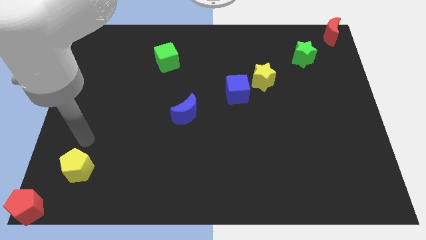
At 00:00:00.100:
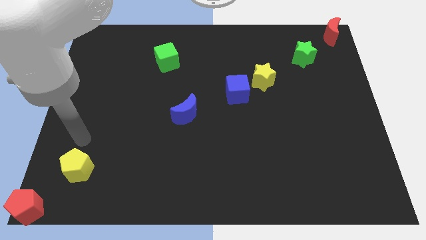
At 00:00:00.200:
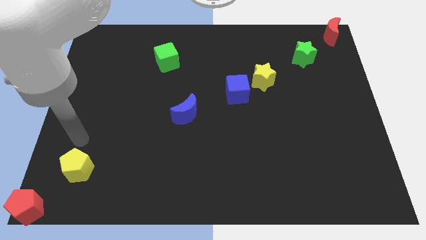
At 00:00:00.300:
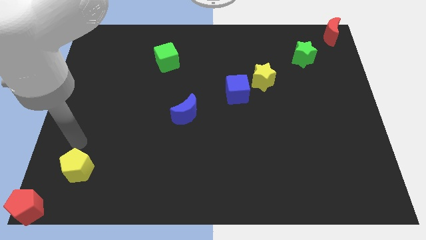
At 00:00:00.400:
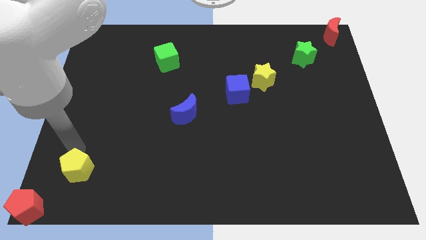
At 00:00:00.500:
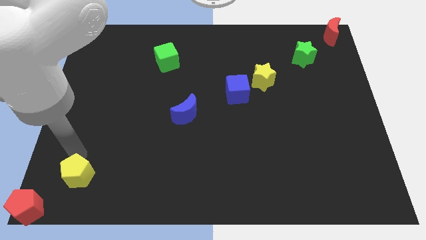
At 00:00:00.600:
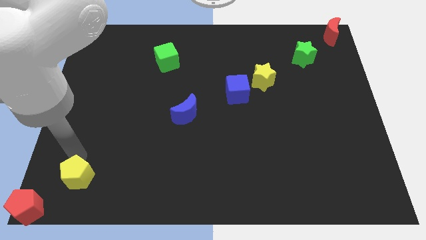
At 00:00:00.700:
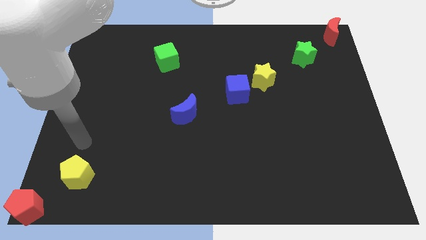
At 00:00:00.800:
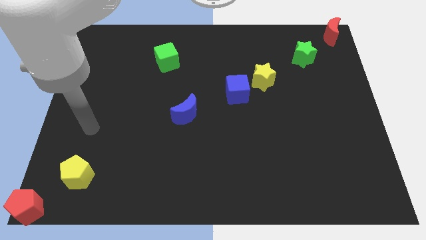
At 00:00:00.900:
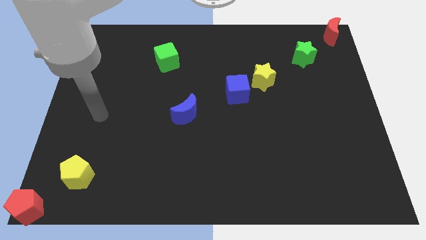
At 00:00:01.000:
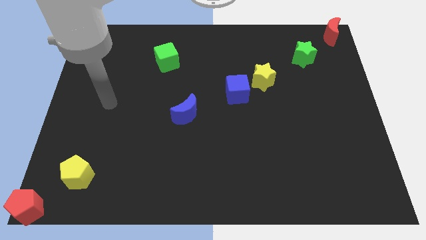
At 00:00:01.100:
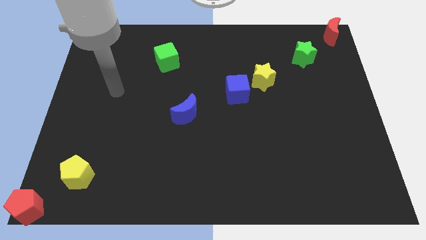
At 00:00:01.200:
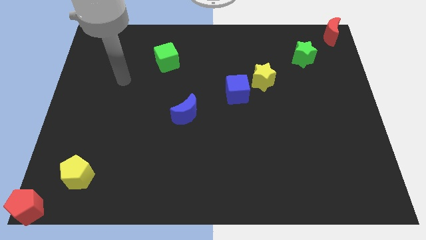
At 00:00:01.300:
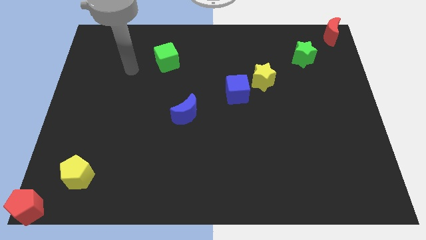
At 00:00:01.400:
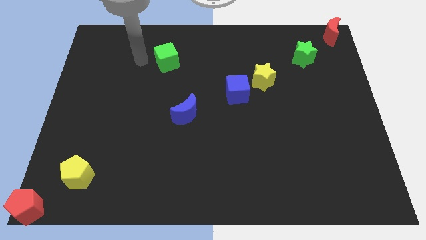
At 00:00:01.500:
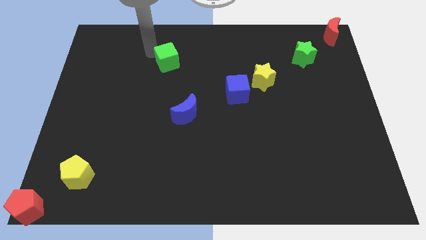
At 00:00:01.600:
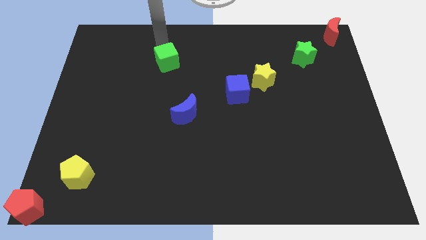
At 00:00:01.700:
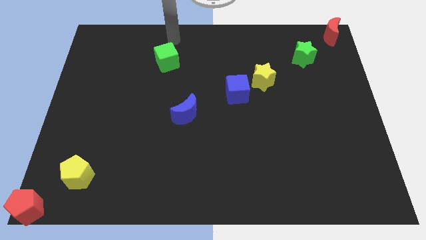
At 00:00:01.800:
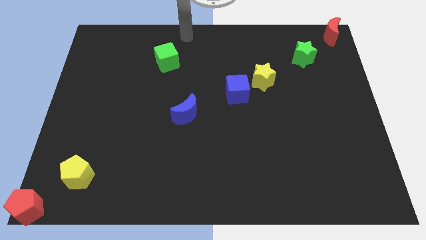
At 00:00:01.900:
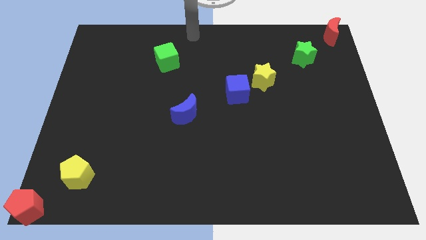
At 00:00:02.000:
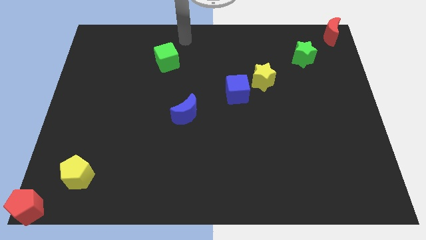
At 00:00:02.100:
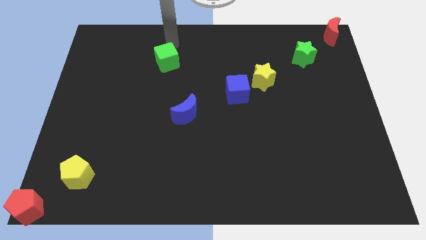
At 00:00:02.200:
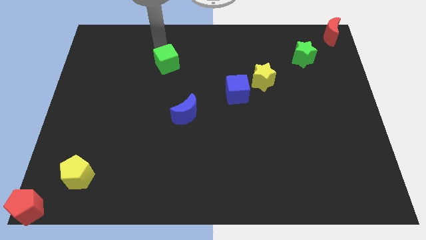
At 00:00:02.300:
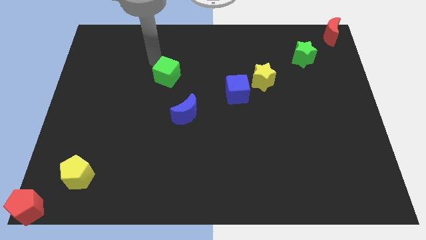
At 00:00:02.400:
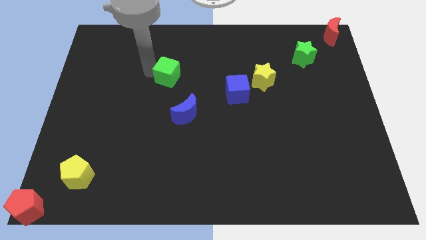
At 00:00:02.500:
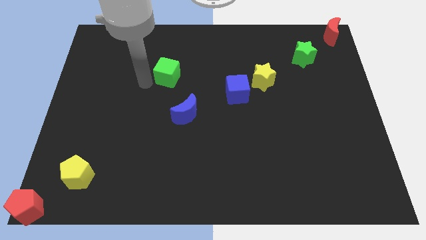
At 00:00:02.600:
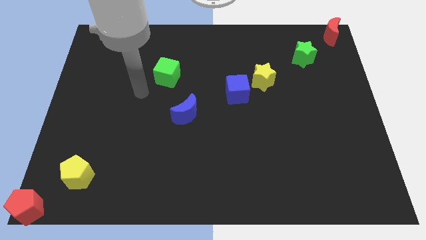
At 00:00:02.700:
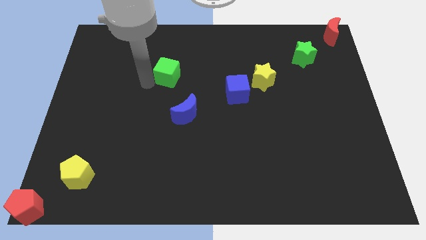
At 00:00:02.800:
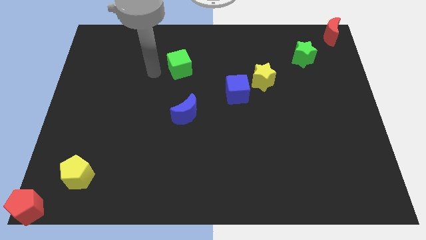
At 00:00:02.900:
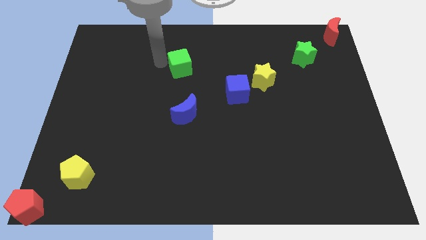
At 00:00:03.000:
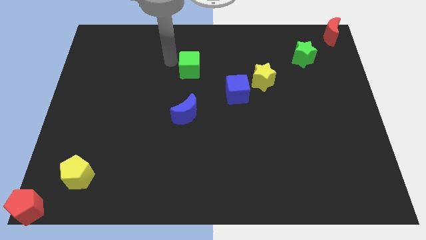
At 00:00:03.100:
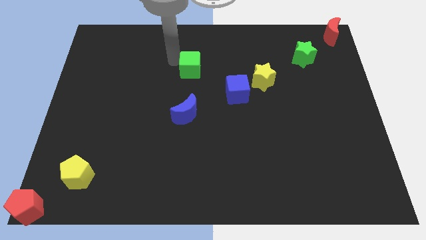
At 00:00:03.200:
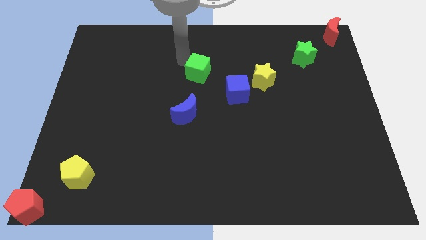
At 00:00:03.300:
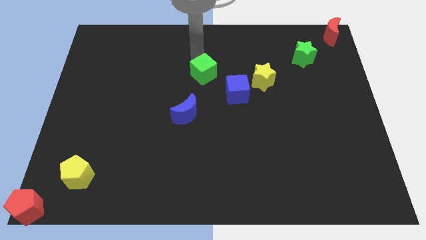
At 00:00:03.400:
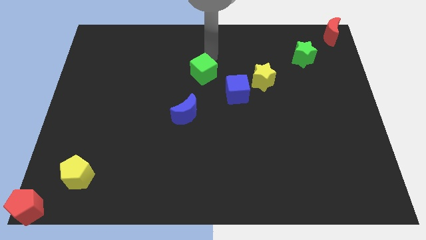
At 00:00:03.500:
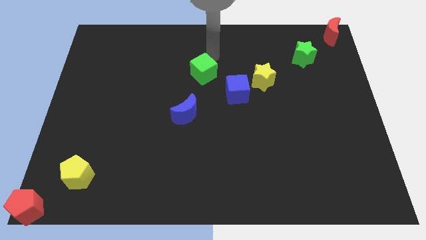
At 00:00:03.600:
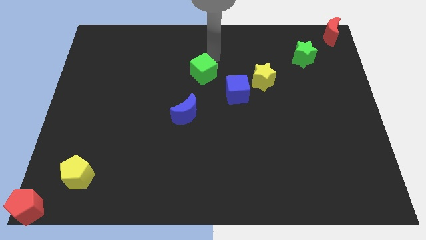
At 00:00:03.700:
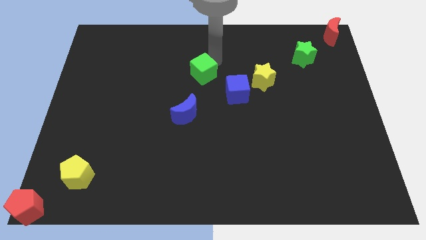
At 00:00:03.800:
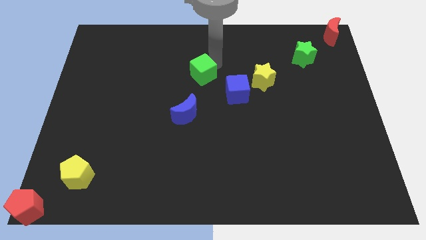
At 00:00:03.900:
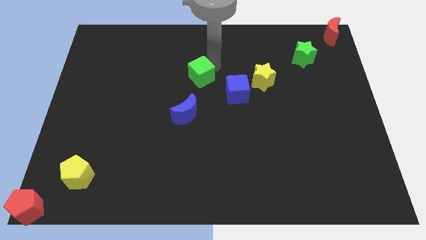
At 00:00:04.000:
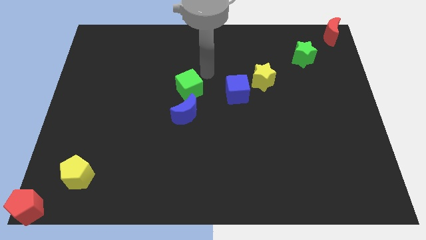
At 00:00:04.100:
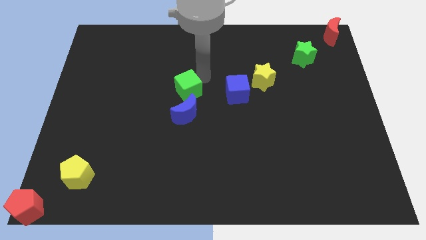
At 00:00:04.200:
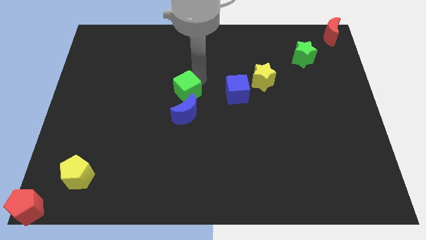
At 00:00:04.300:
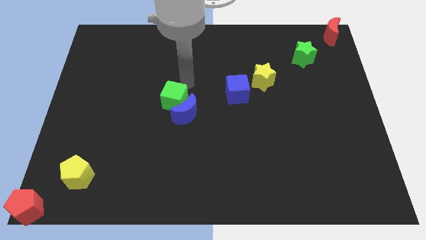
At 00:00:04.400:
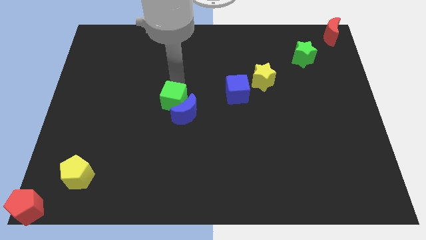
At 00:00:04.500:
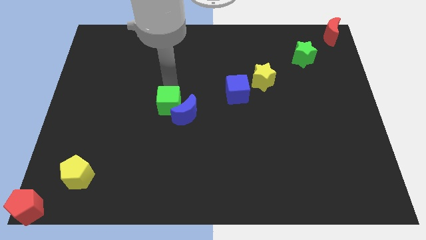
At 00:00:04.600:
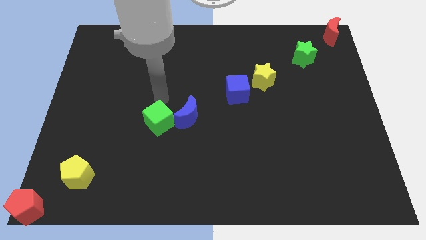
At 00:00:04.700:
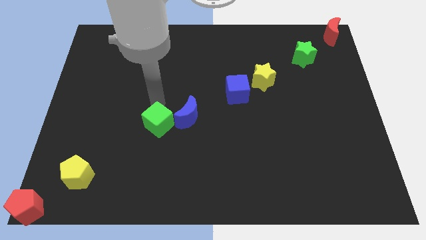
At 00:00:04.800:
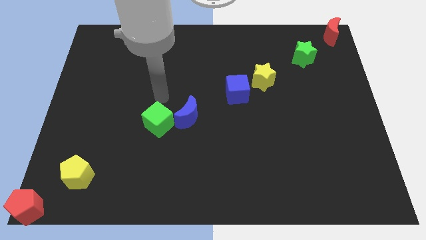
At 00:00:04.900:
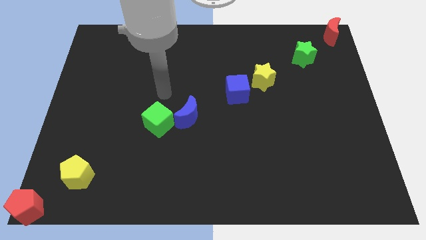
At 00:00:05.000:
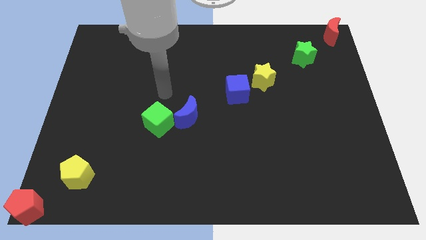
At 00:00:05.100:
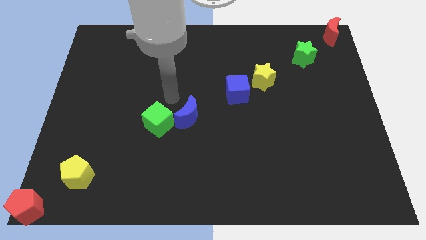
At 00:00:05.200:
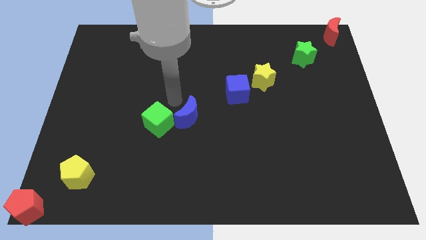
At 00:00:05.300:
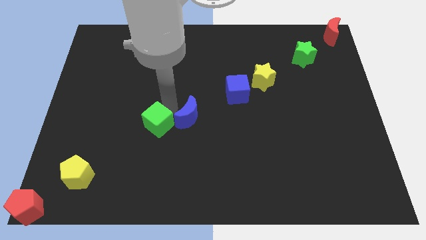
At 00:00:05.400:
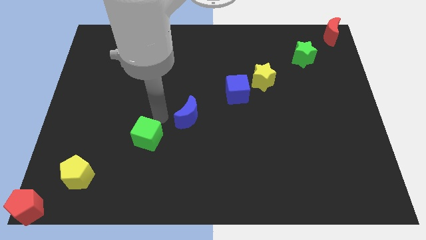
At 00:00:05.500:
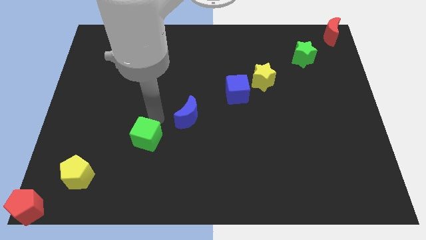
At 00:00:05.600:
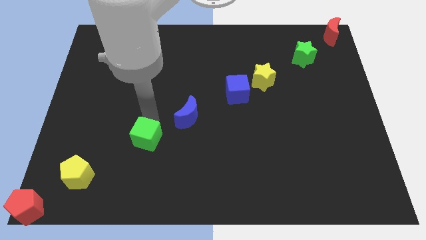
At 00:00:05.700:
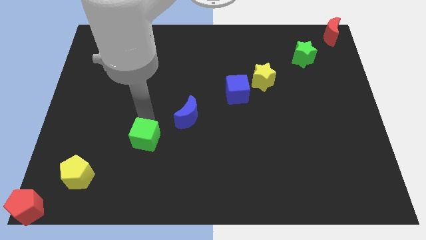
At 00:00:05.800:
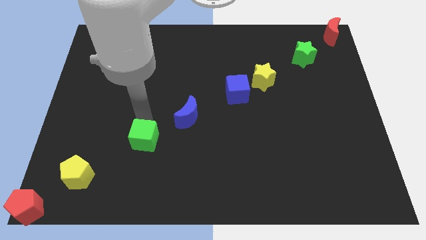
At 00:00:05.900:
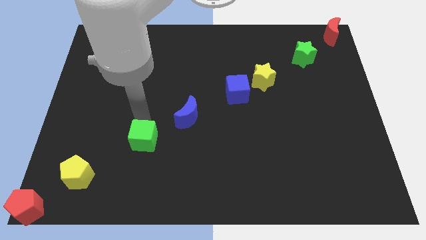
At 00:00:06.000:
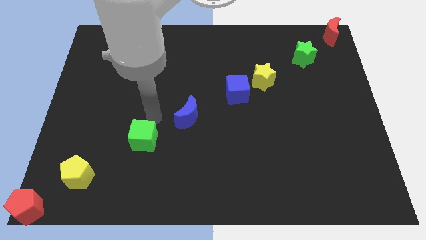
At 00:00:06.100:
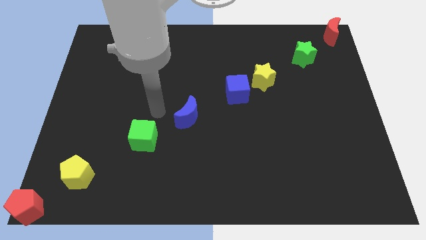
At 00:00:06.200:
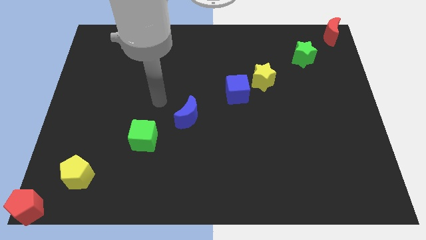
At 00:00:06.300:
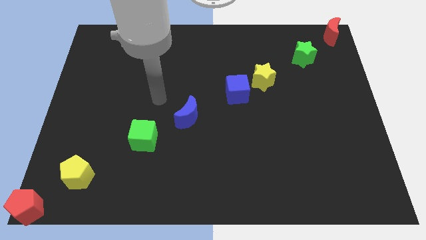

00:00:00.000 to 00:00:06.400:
move the green cube in between the blue crescent and yellow pentagon

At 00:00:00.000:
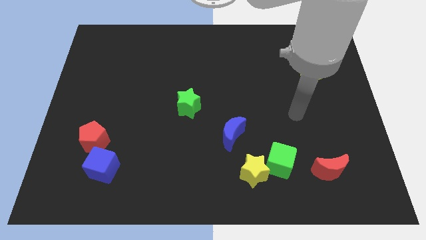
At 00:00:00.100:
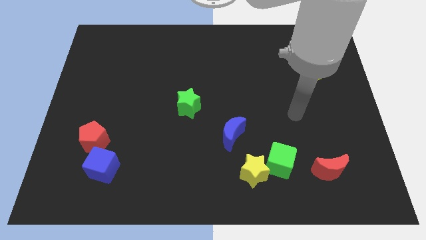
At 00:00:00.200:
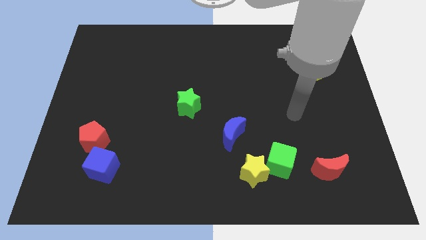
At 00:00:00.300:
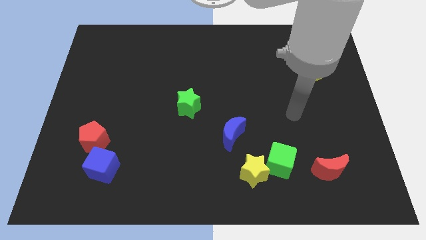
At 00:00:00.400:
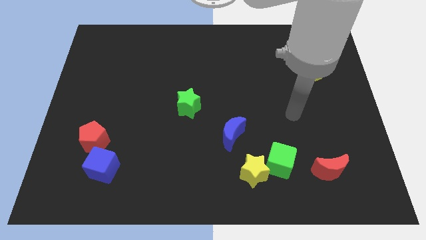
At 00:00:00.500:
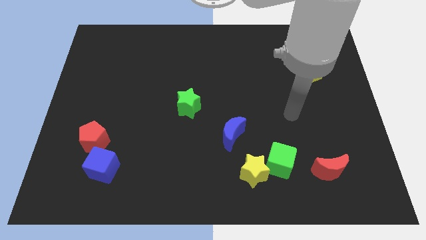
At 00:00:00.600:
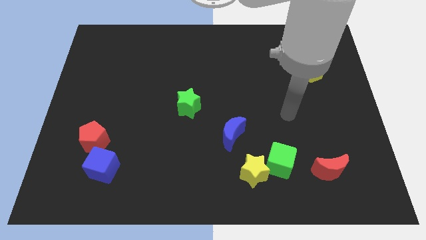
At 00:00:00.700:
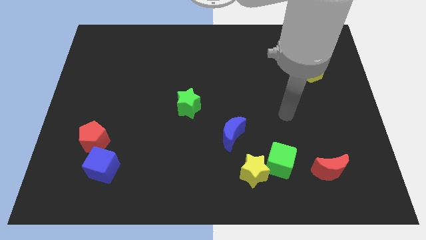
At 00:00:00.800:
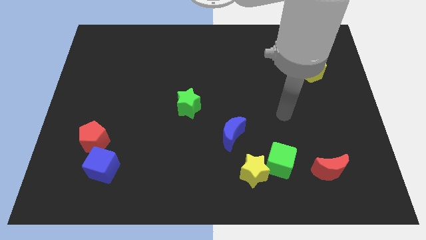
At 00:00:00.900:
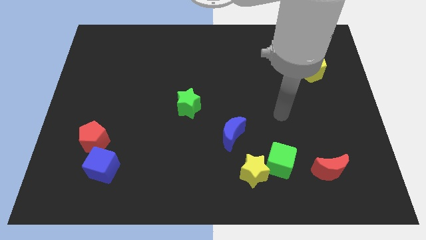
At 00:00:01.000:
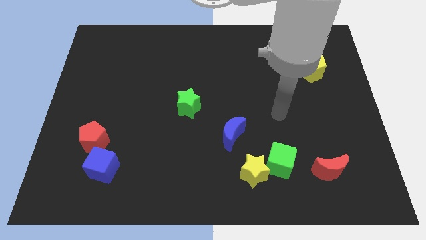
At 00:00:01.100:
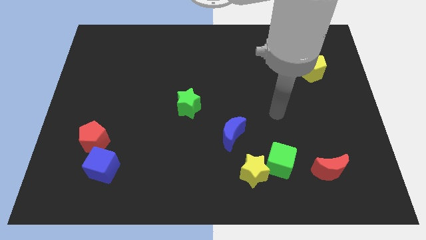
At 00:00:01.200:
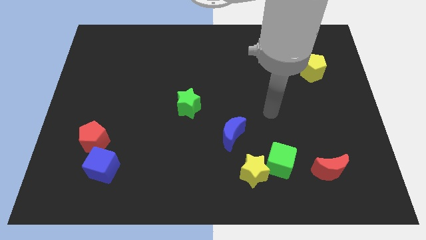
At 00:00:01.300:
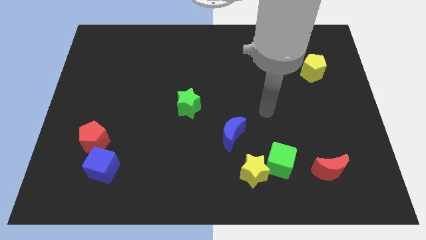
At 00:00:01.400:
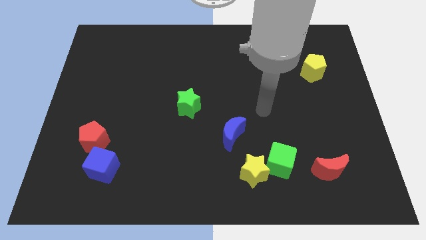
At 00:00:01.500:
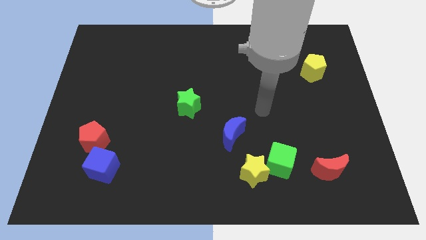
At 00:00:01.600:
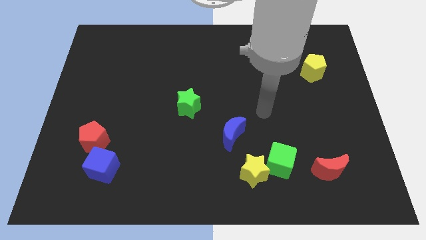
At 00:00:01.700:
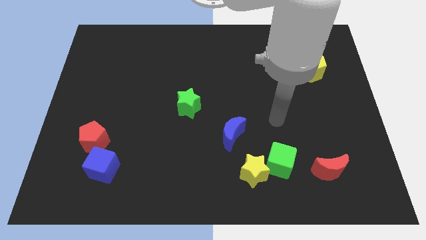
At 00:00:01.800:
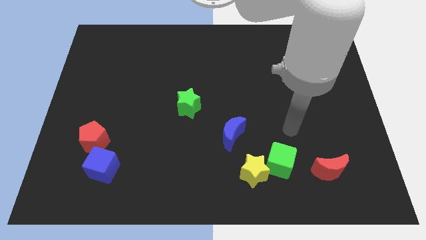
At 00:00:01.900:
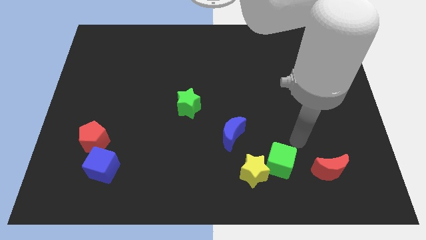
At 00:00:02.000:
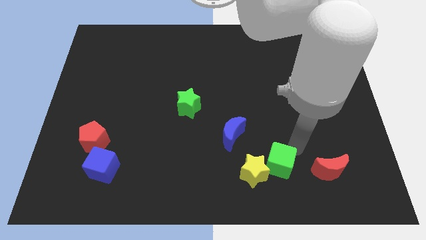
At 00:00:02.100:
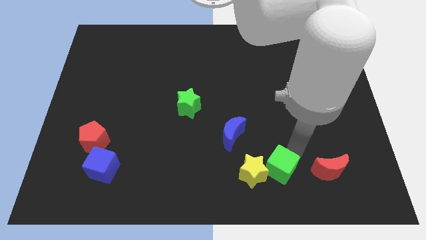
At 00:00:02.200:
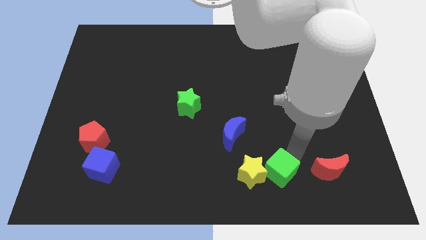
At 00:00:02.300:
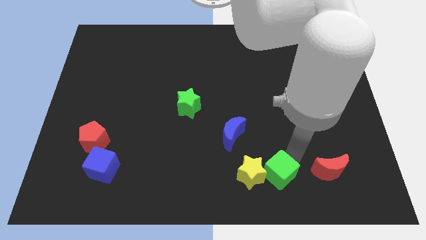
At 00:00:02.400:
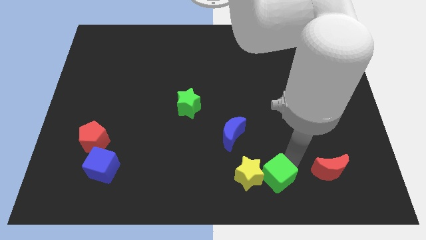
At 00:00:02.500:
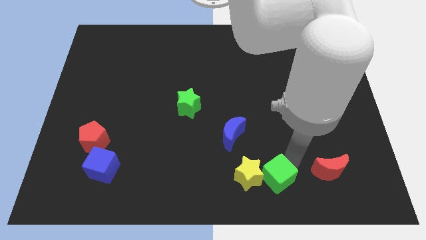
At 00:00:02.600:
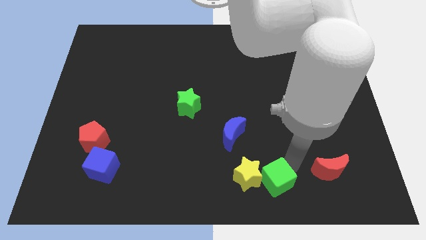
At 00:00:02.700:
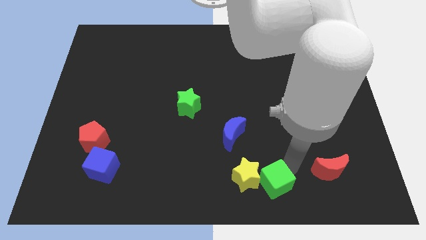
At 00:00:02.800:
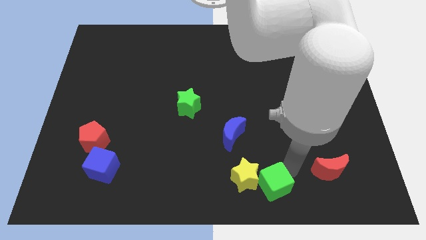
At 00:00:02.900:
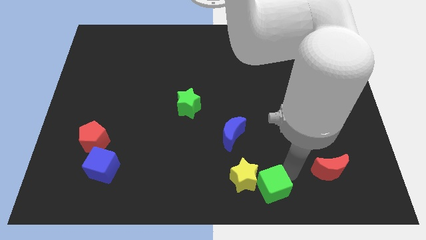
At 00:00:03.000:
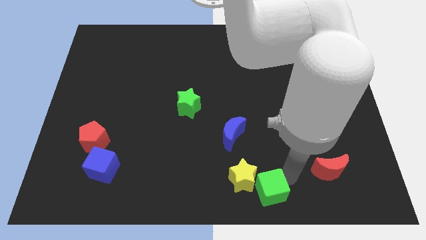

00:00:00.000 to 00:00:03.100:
push the green cube slightly to the bottom
